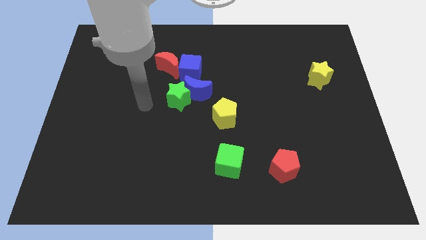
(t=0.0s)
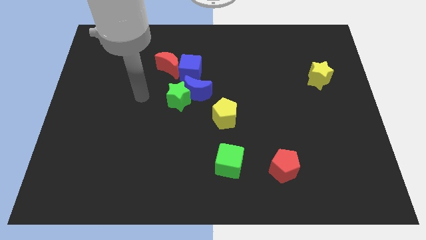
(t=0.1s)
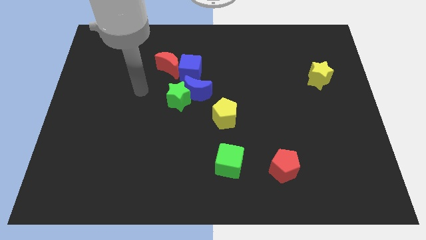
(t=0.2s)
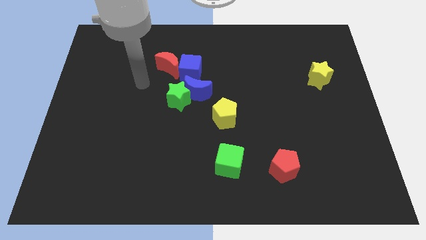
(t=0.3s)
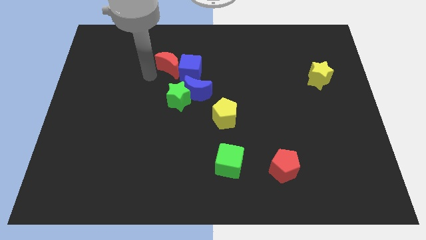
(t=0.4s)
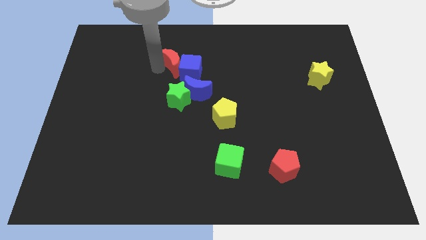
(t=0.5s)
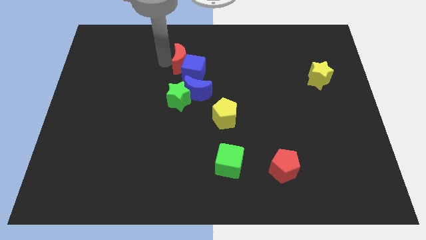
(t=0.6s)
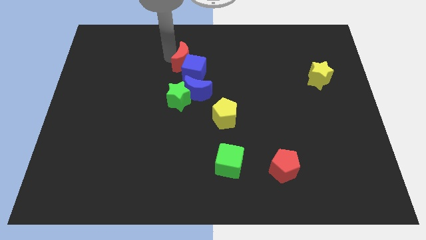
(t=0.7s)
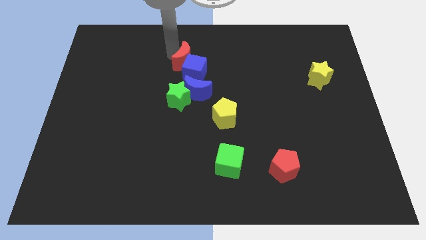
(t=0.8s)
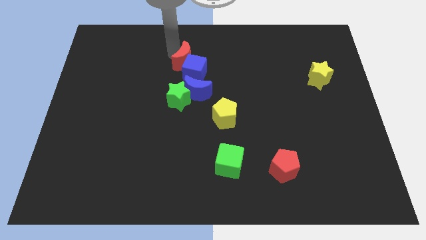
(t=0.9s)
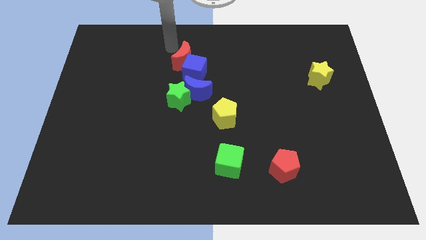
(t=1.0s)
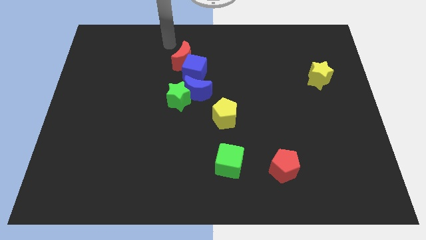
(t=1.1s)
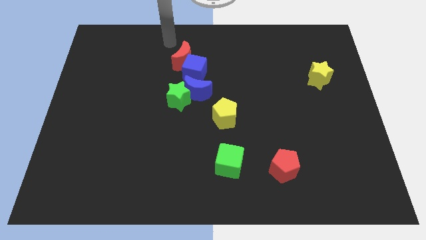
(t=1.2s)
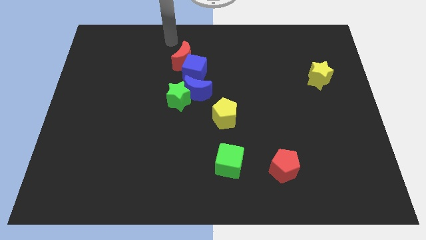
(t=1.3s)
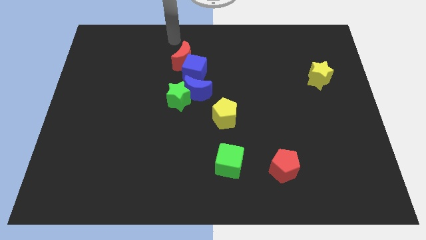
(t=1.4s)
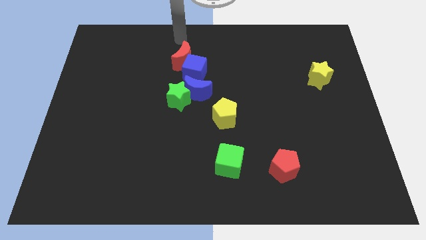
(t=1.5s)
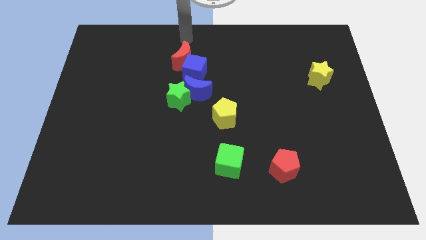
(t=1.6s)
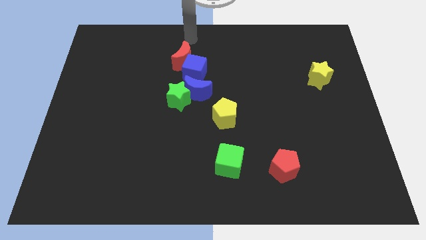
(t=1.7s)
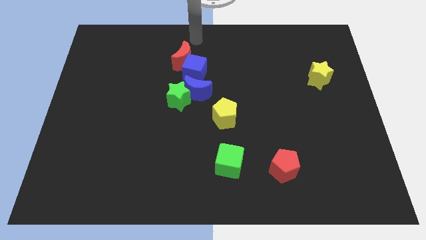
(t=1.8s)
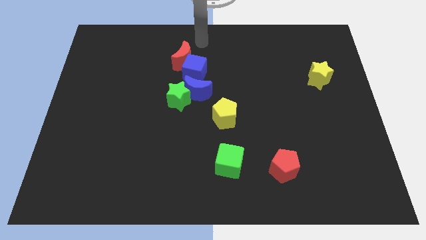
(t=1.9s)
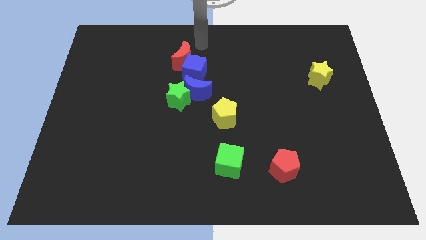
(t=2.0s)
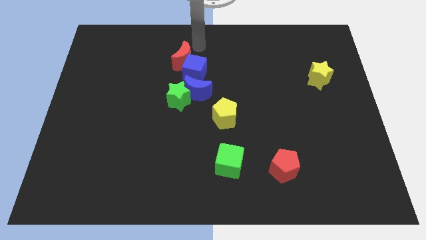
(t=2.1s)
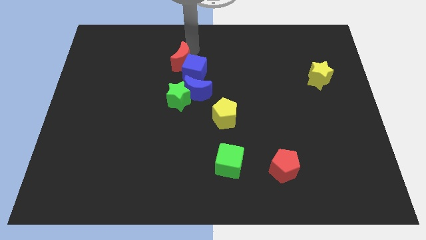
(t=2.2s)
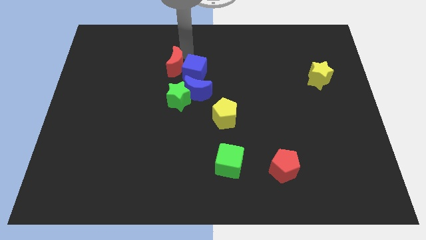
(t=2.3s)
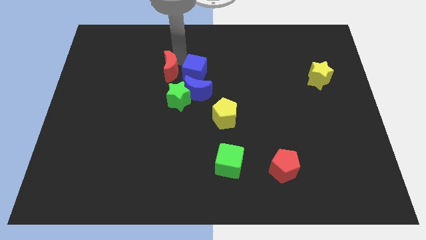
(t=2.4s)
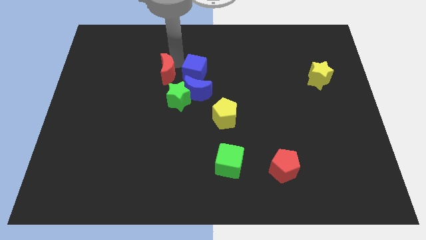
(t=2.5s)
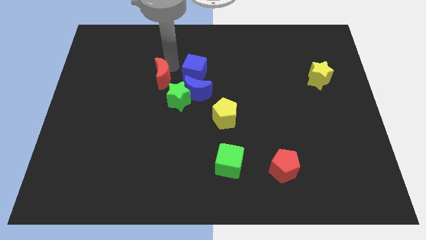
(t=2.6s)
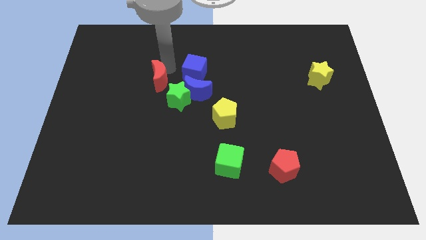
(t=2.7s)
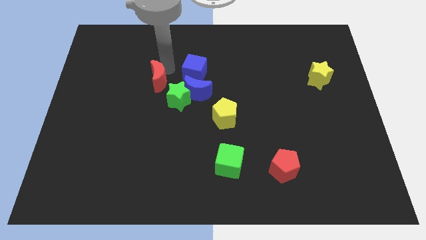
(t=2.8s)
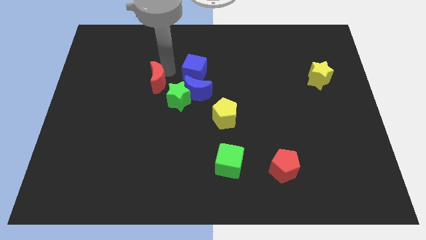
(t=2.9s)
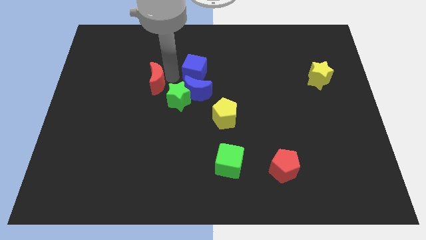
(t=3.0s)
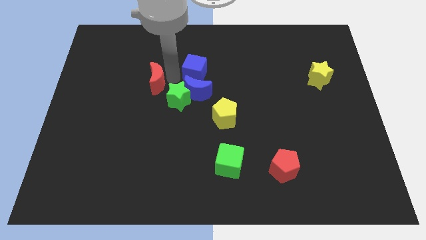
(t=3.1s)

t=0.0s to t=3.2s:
push the red moon diagonal towards green star

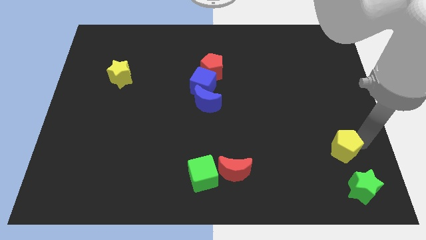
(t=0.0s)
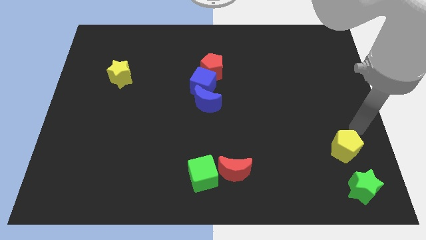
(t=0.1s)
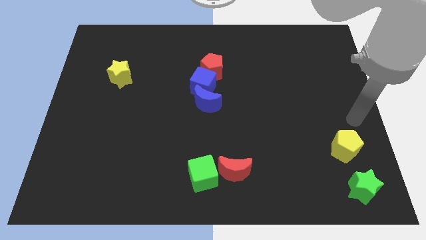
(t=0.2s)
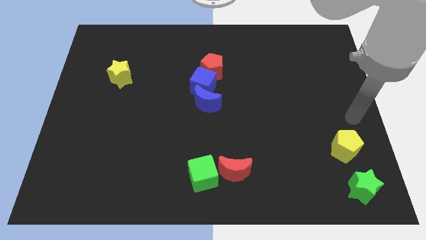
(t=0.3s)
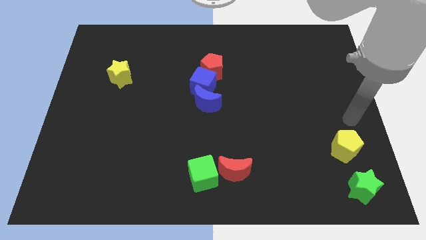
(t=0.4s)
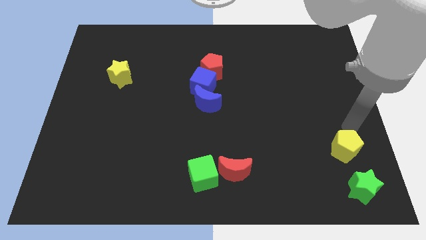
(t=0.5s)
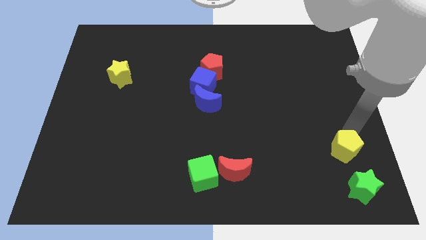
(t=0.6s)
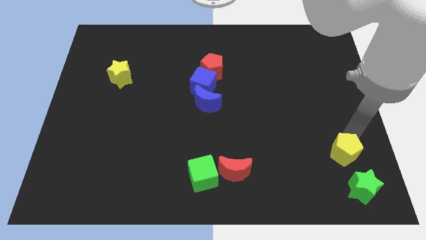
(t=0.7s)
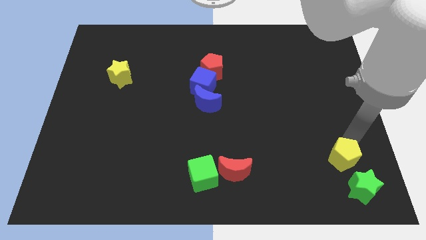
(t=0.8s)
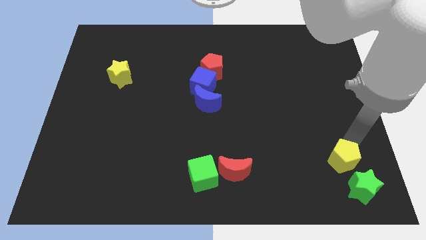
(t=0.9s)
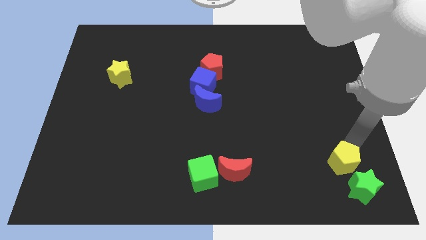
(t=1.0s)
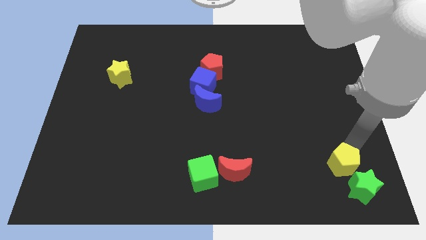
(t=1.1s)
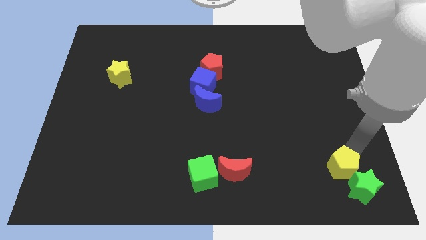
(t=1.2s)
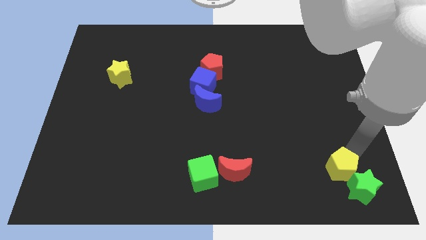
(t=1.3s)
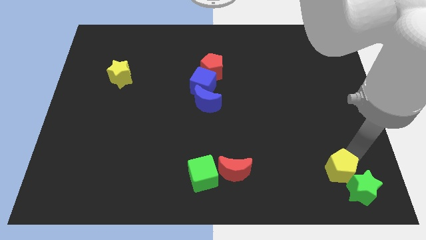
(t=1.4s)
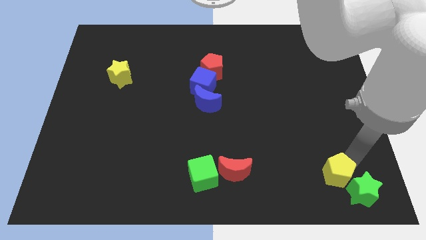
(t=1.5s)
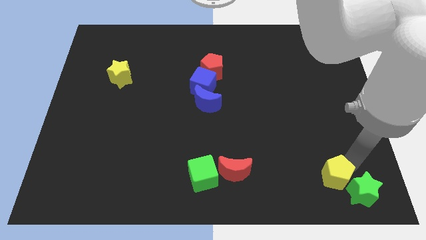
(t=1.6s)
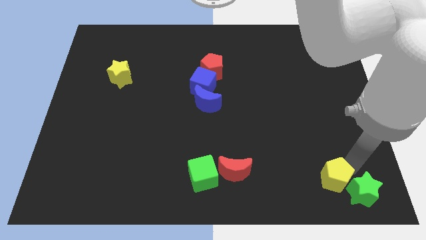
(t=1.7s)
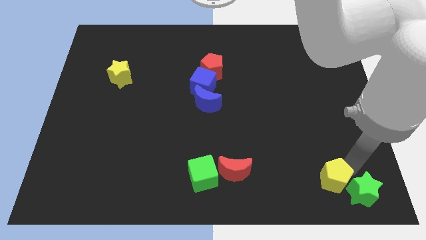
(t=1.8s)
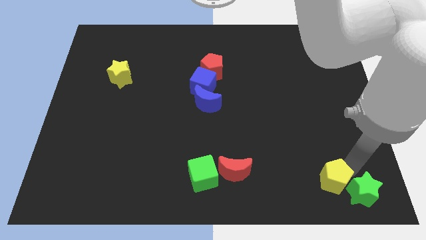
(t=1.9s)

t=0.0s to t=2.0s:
place the yellow pentagon close to the green star

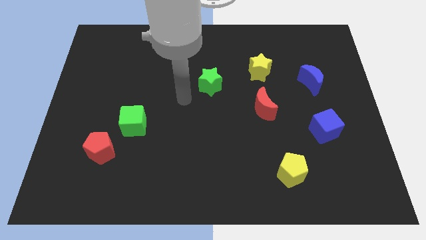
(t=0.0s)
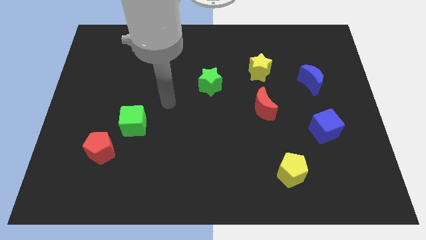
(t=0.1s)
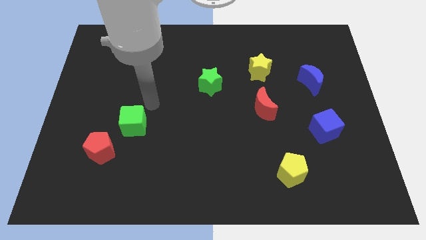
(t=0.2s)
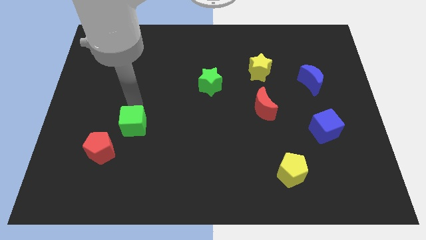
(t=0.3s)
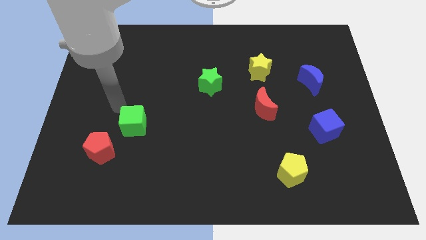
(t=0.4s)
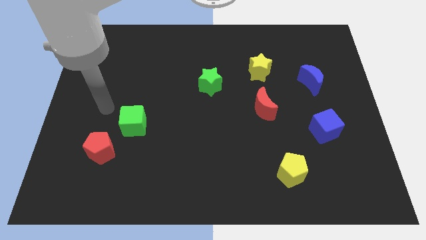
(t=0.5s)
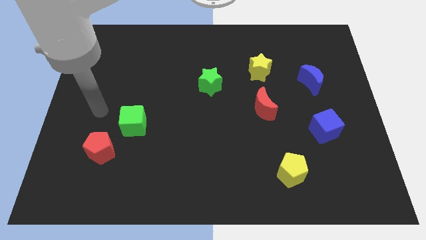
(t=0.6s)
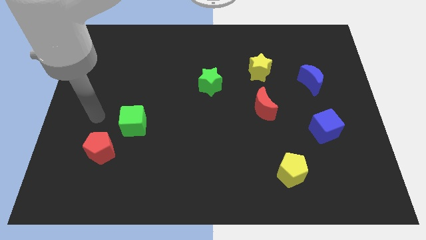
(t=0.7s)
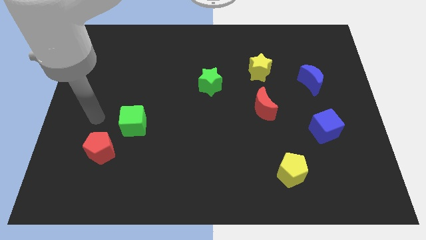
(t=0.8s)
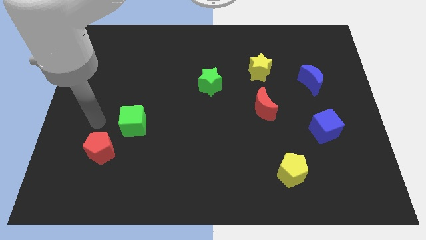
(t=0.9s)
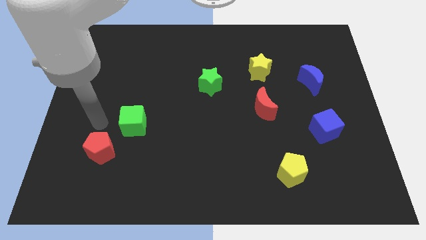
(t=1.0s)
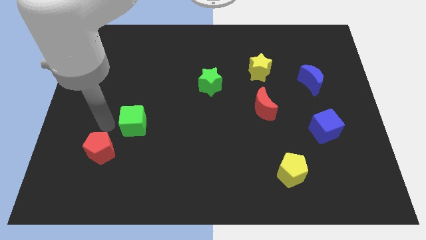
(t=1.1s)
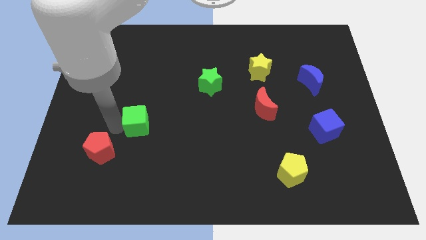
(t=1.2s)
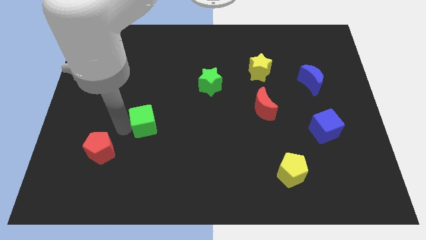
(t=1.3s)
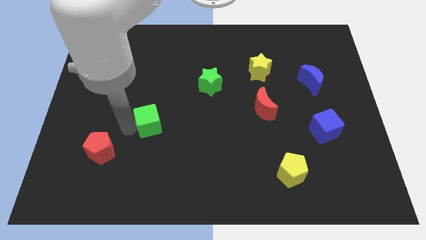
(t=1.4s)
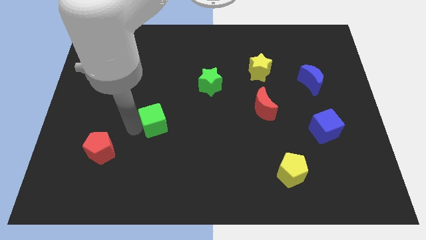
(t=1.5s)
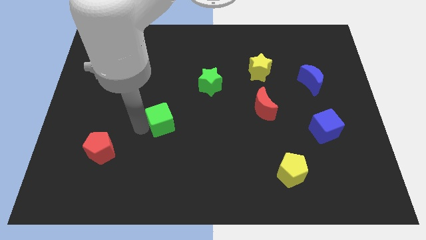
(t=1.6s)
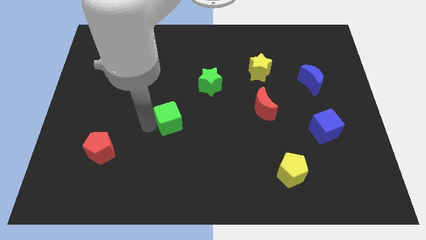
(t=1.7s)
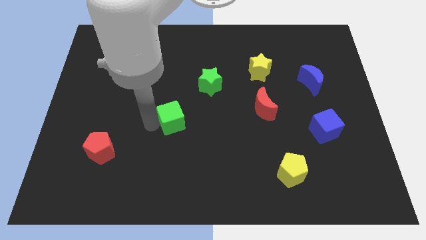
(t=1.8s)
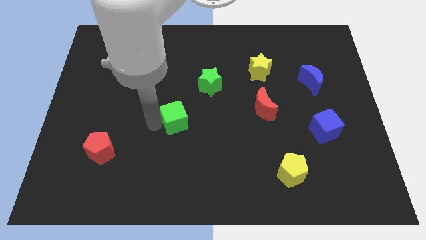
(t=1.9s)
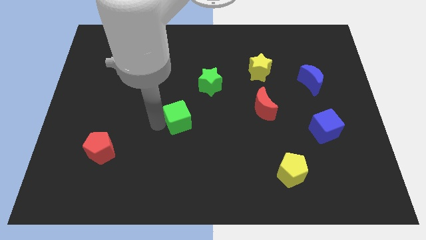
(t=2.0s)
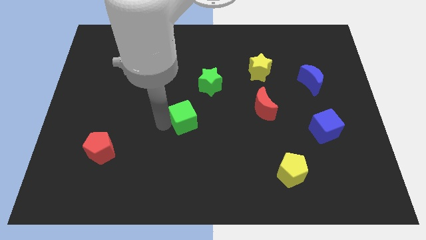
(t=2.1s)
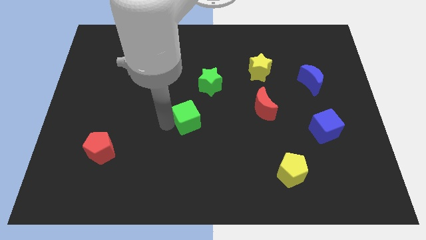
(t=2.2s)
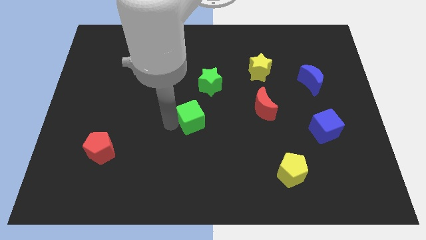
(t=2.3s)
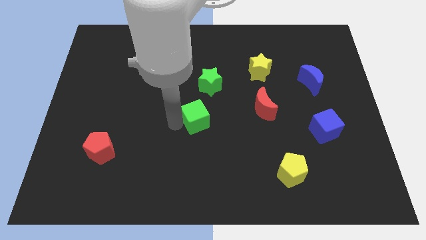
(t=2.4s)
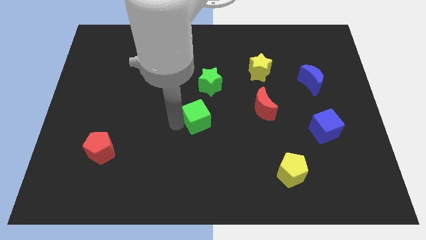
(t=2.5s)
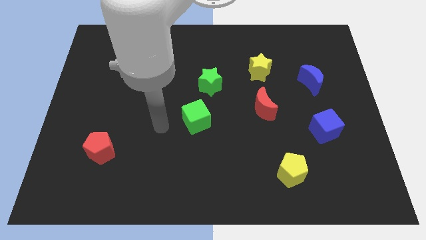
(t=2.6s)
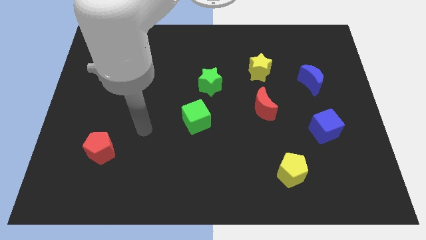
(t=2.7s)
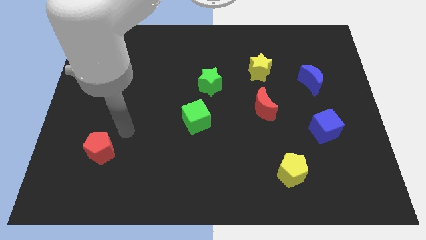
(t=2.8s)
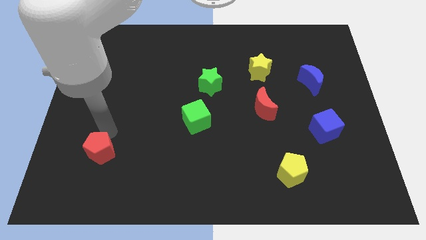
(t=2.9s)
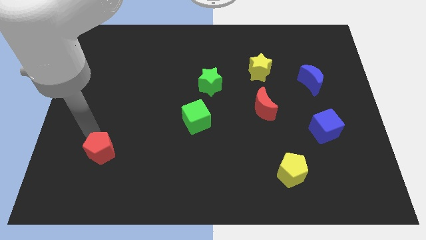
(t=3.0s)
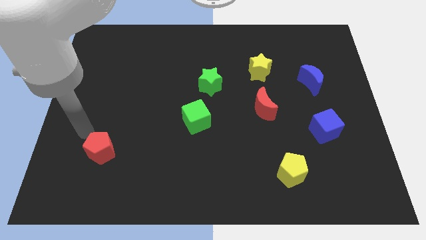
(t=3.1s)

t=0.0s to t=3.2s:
push the green cube towards the red moon

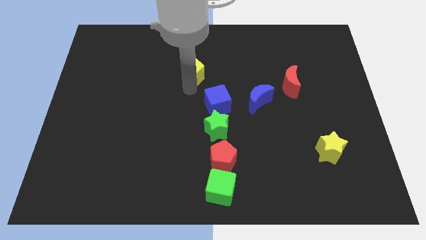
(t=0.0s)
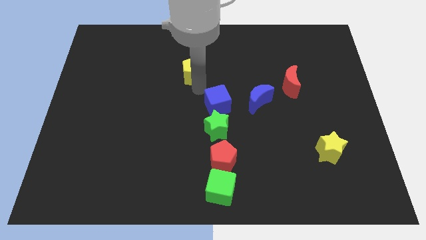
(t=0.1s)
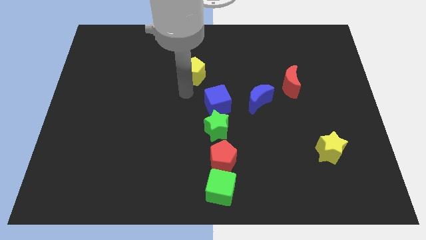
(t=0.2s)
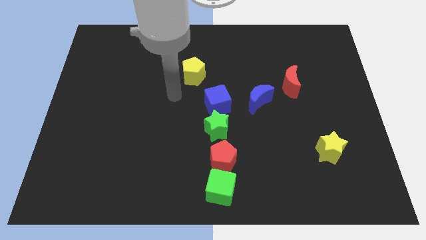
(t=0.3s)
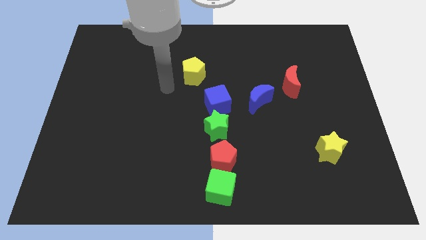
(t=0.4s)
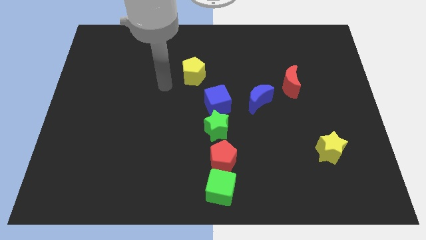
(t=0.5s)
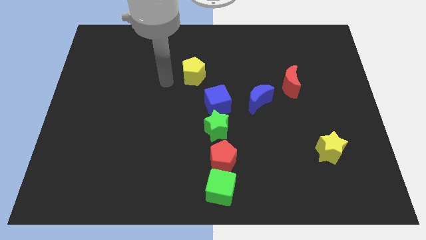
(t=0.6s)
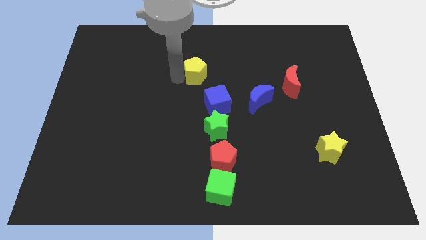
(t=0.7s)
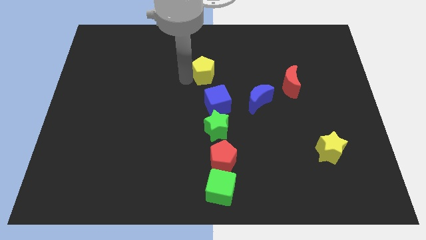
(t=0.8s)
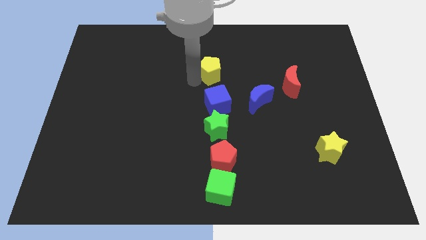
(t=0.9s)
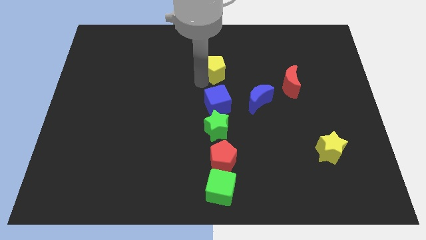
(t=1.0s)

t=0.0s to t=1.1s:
place yellow pentagon on the top of blue cube
